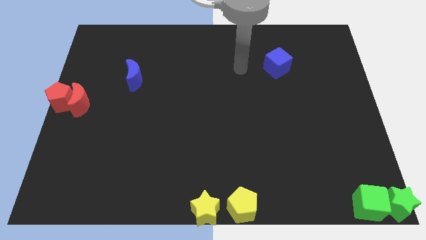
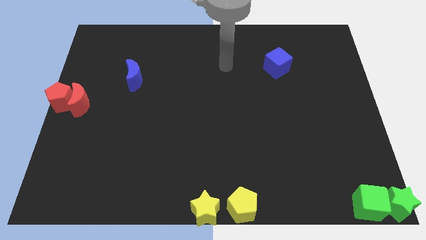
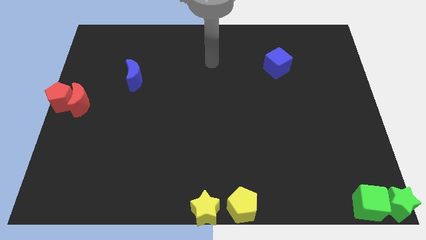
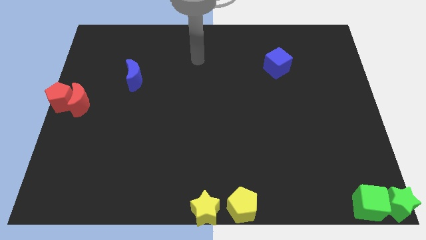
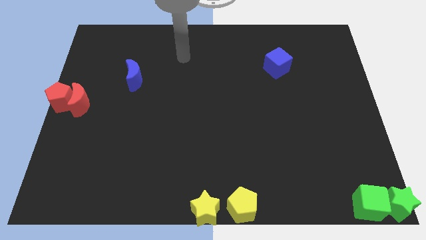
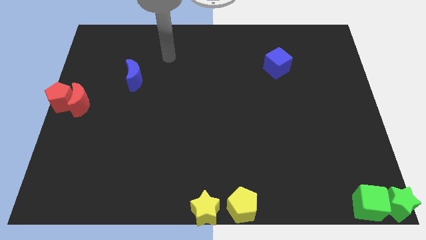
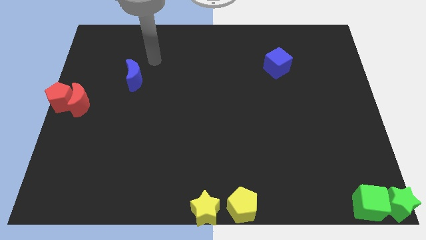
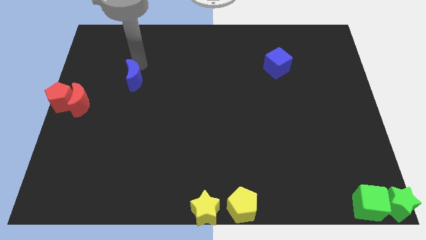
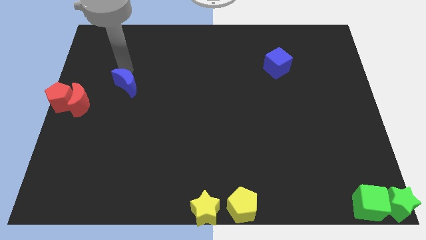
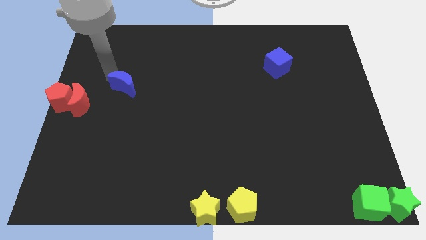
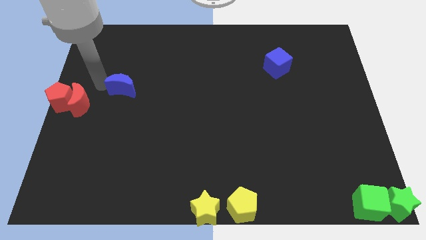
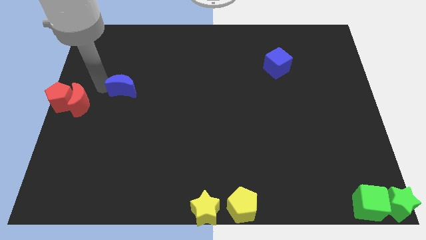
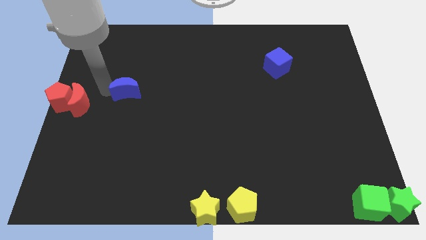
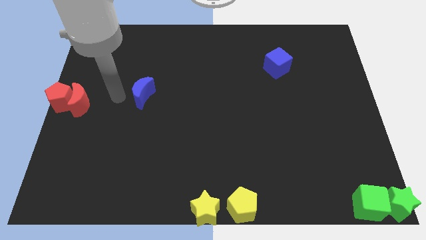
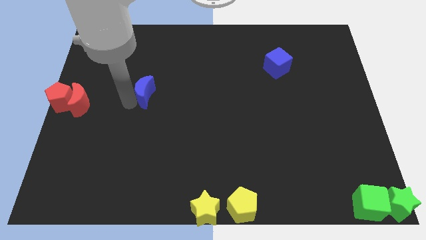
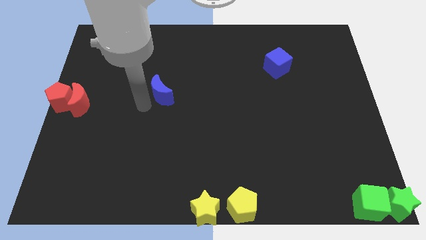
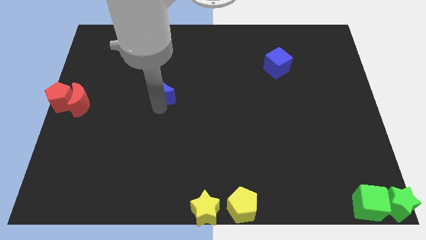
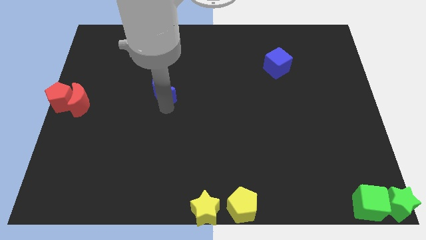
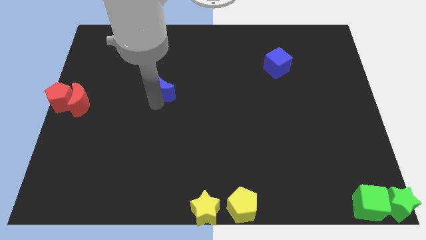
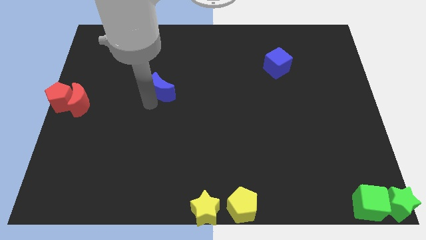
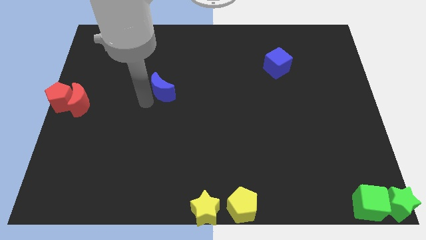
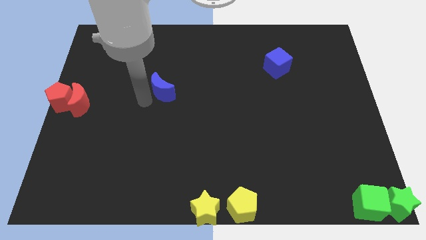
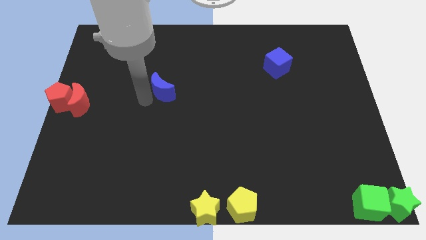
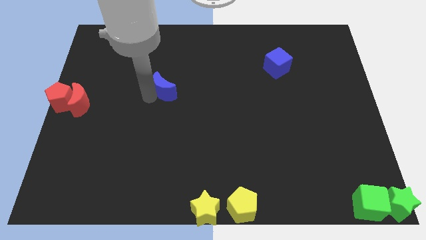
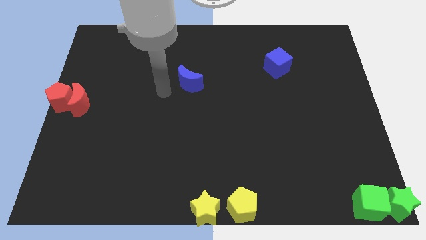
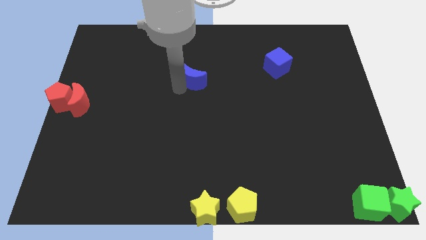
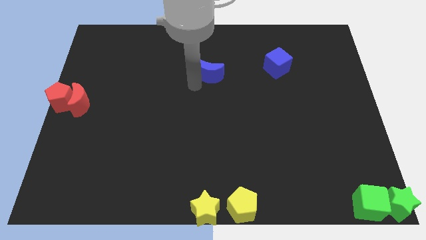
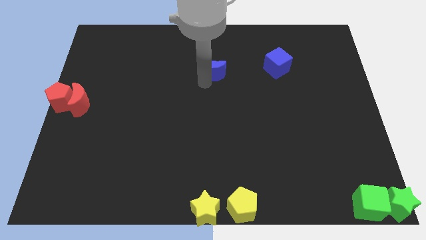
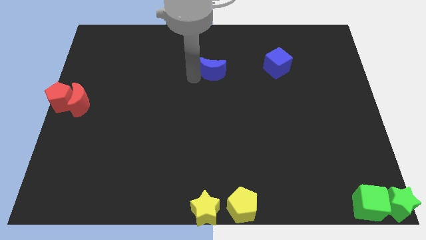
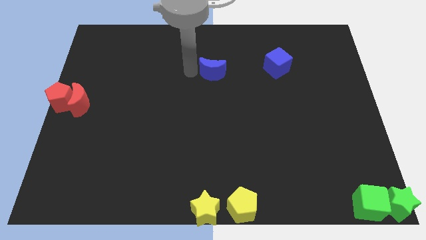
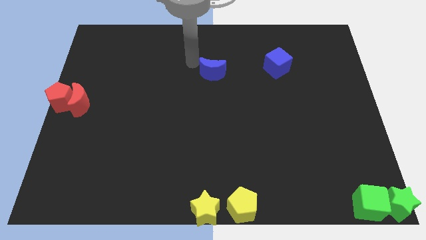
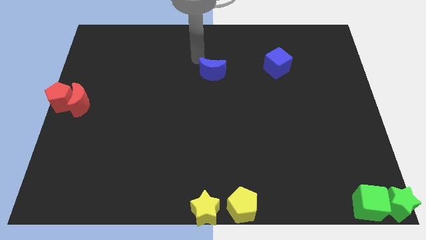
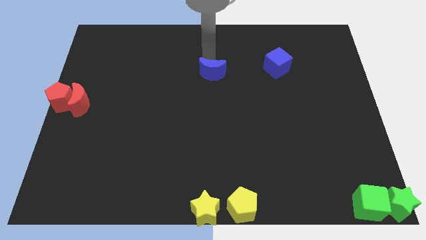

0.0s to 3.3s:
move the blue crescent towards the left side of the blue cube

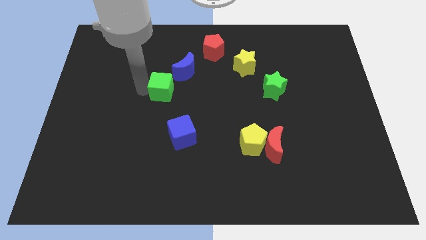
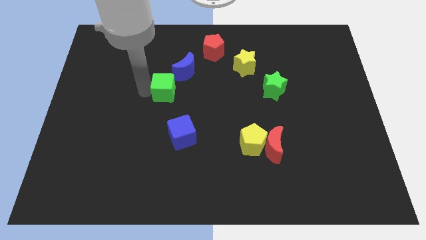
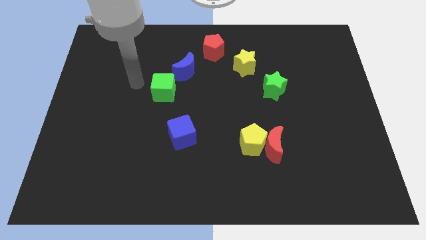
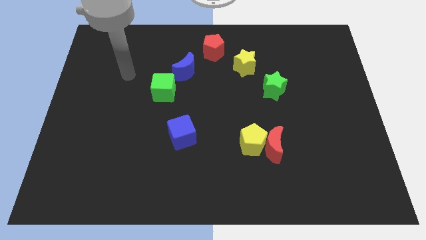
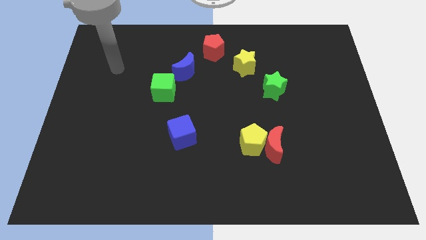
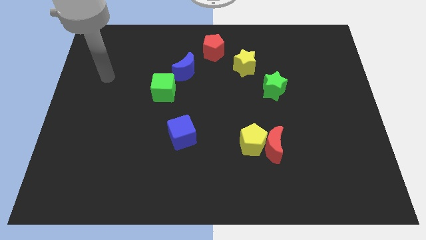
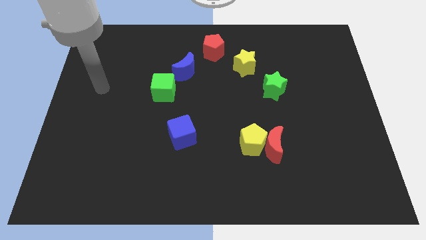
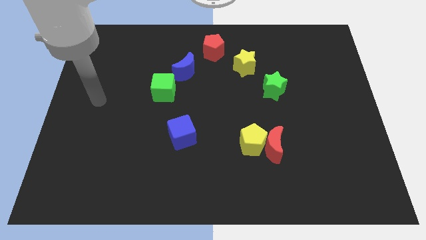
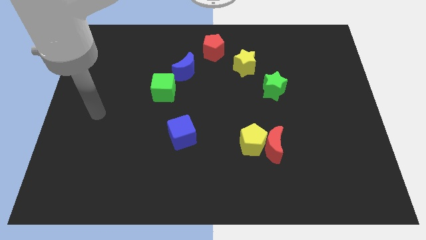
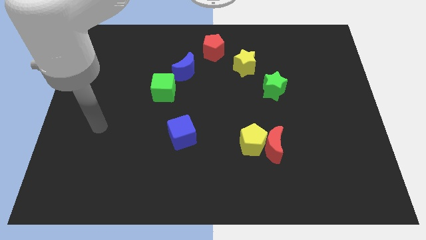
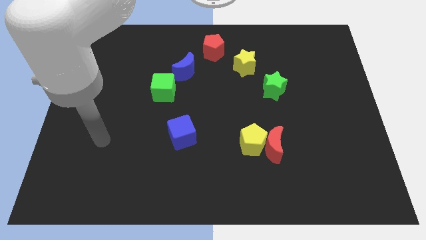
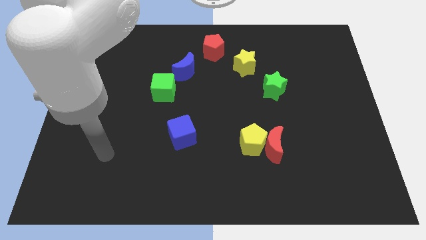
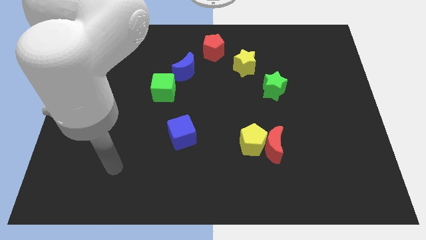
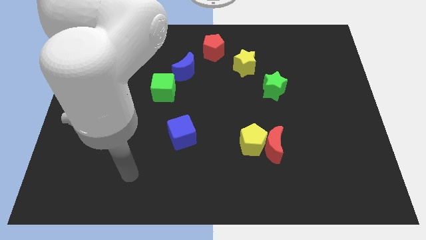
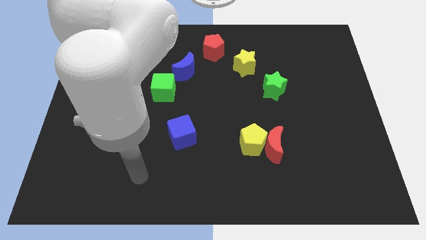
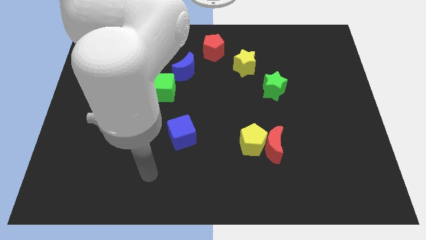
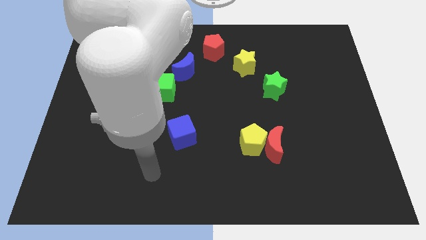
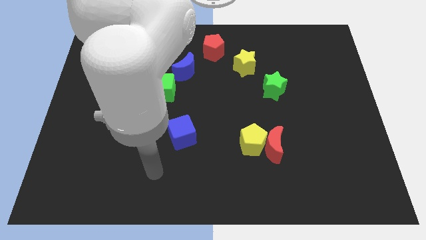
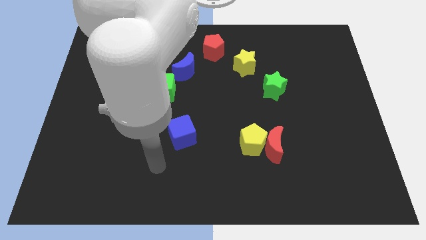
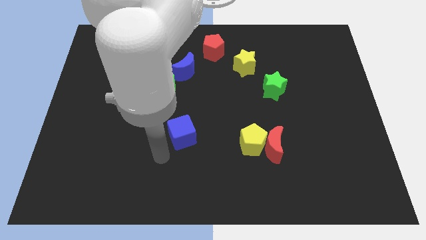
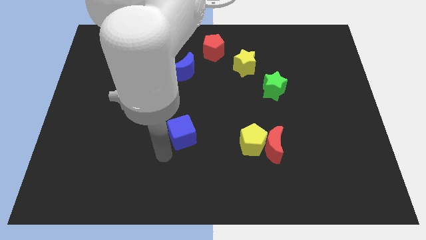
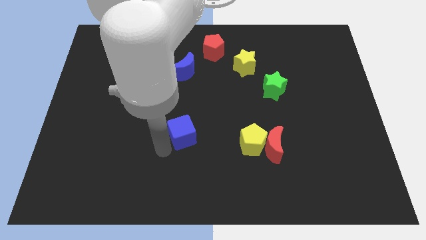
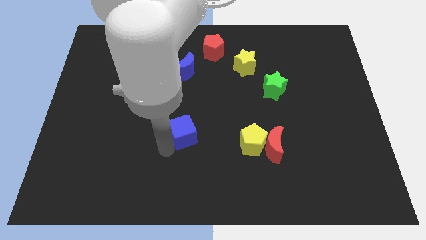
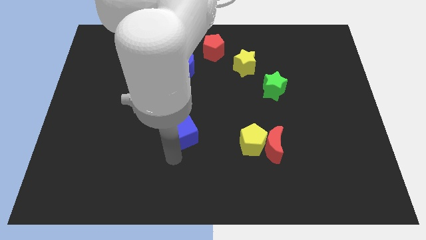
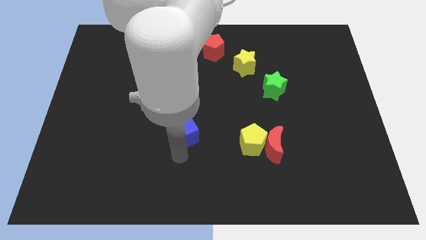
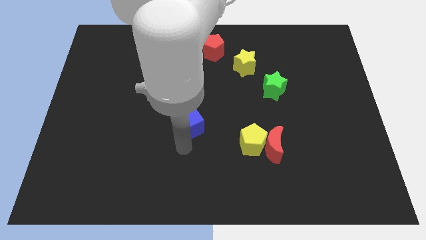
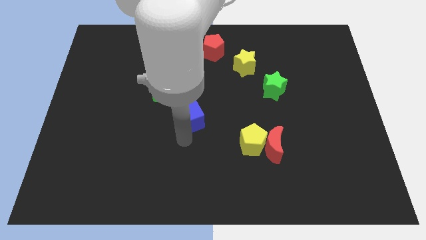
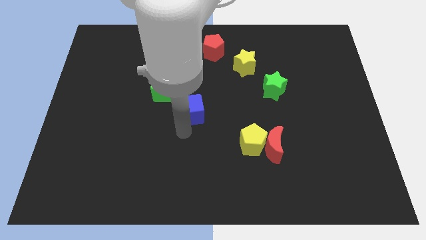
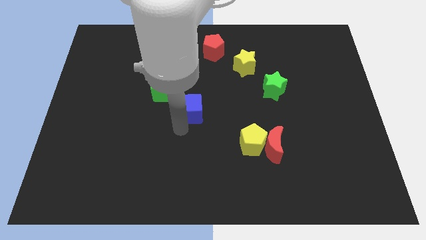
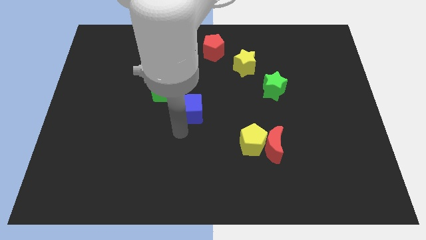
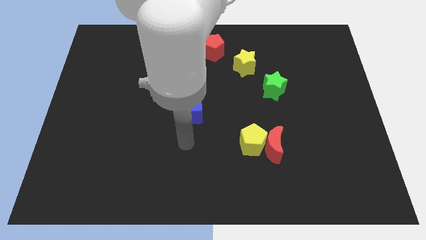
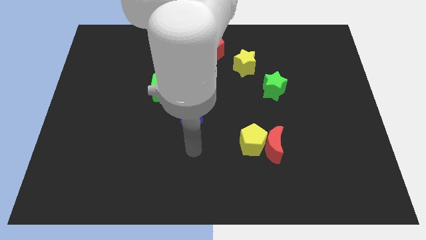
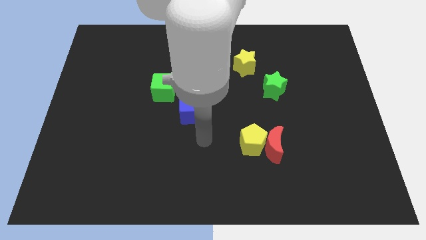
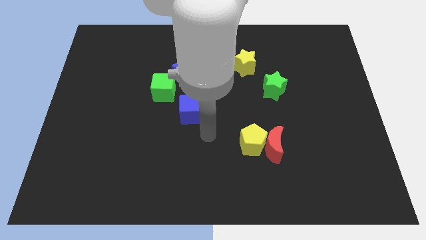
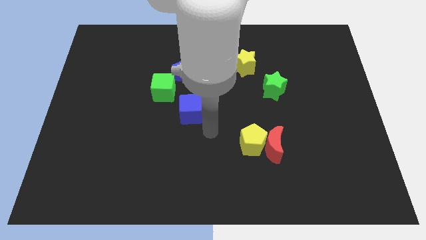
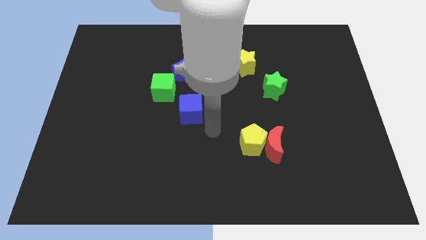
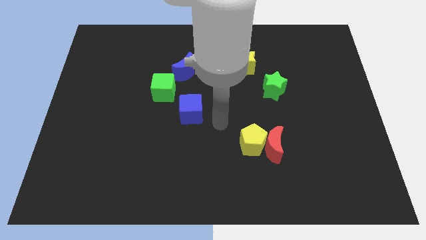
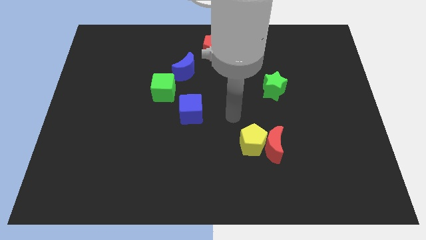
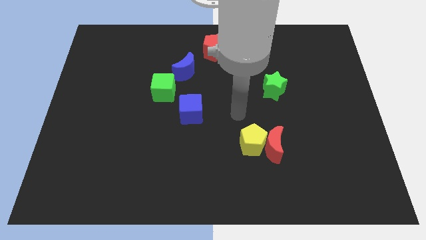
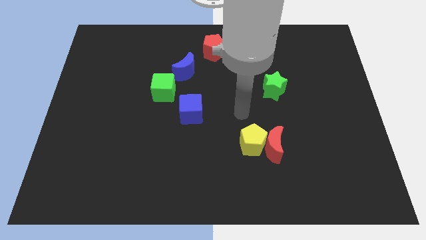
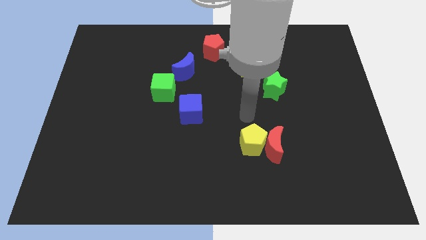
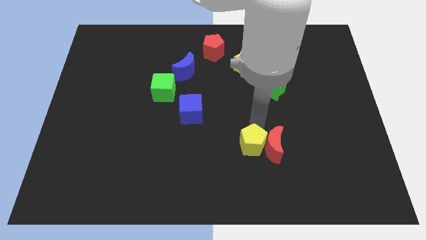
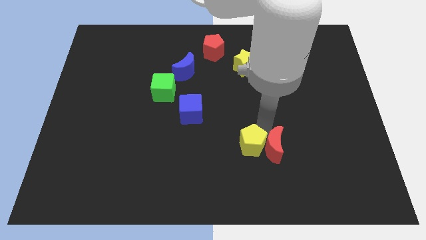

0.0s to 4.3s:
push the blue cube to the bottom right of the green cube

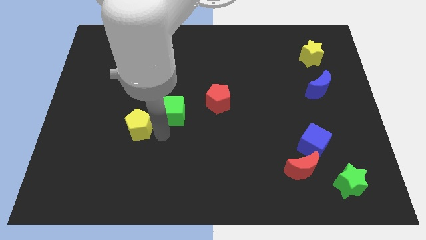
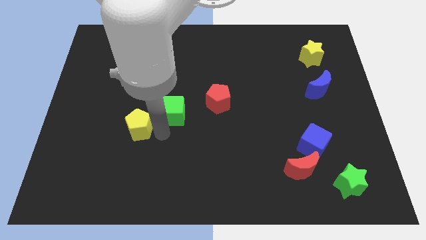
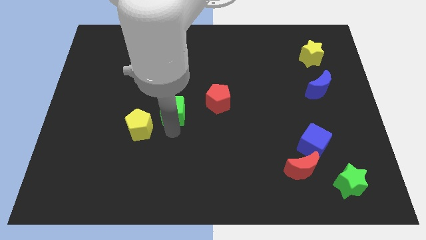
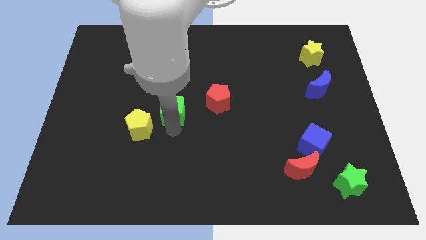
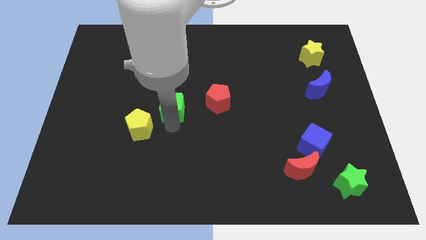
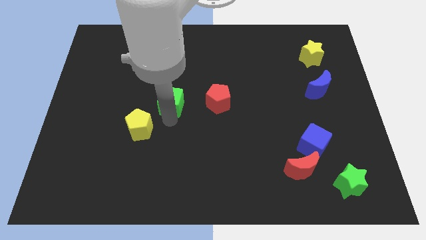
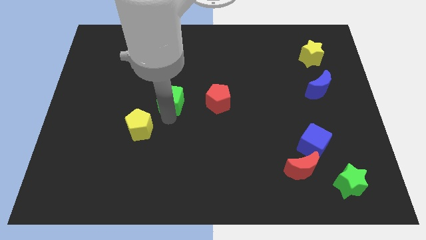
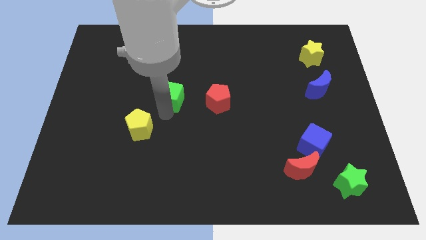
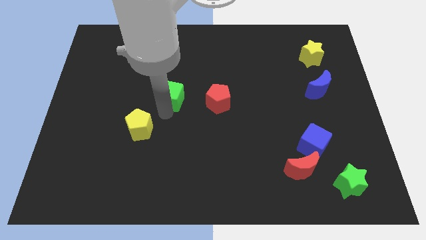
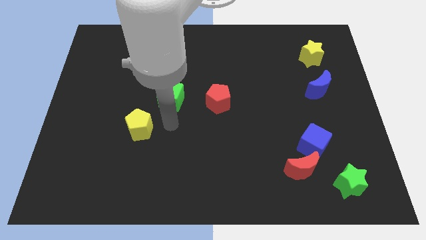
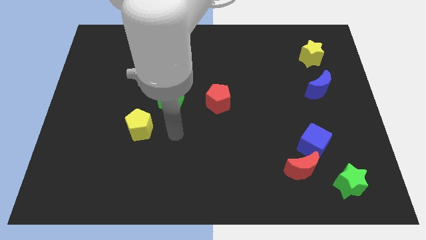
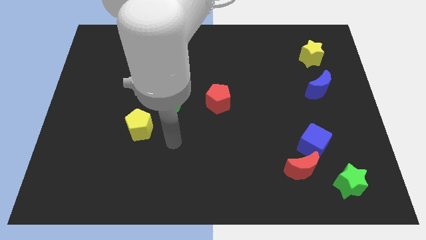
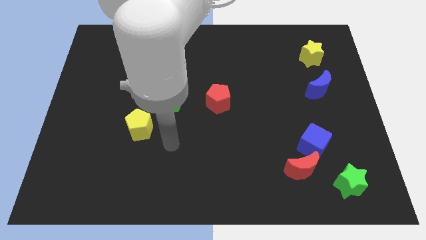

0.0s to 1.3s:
move the green cube slightly upwards
